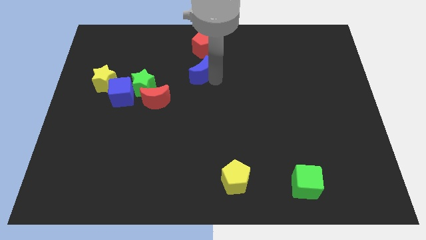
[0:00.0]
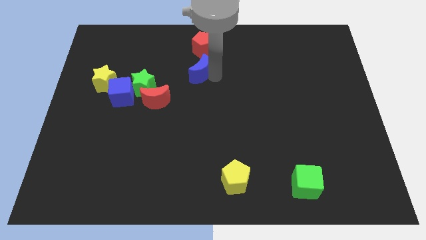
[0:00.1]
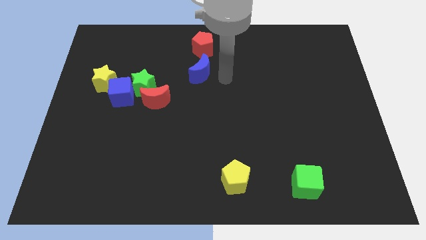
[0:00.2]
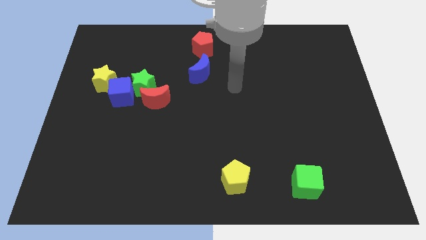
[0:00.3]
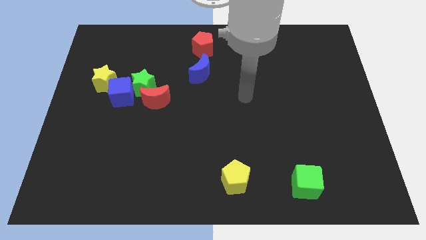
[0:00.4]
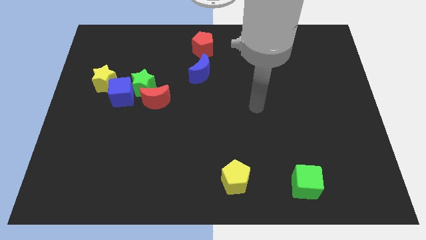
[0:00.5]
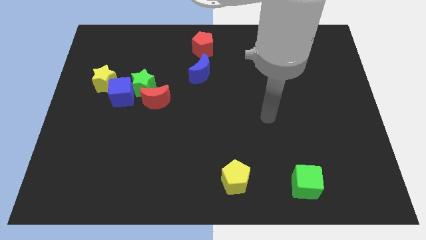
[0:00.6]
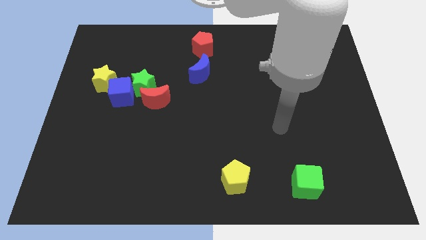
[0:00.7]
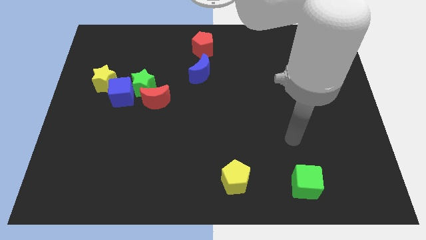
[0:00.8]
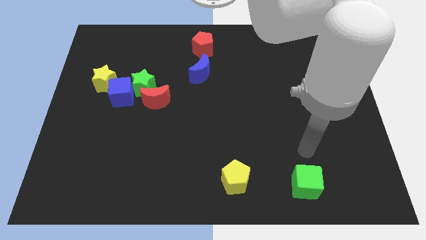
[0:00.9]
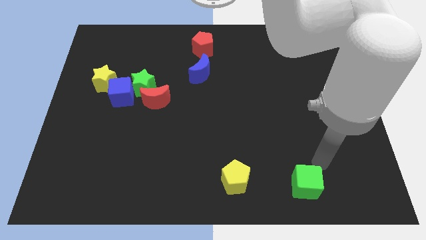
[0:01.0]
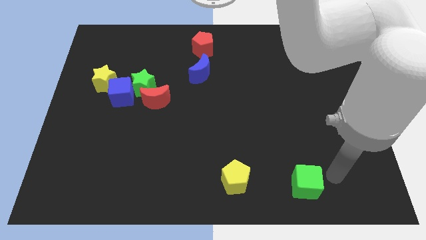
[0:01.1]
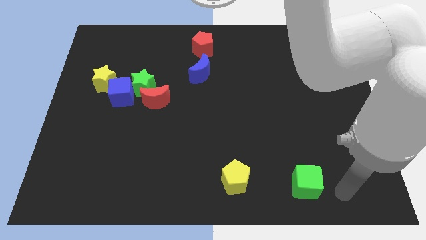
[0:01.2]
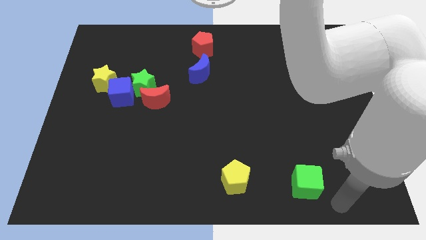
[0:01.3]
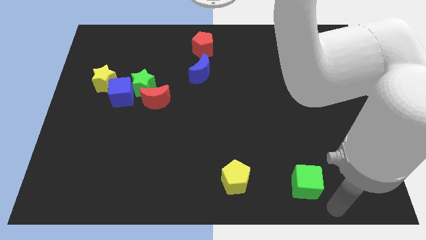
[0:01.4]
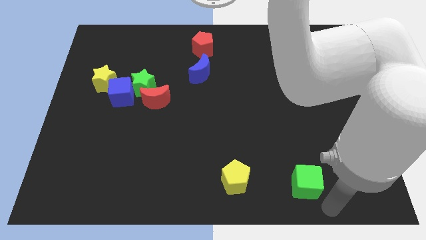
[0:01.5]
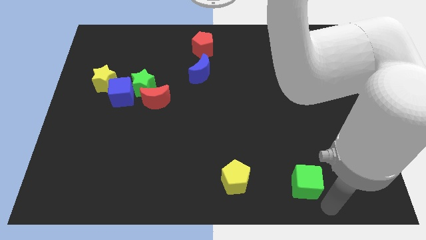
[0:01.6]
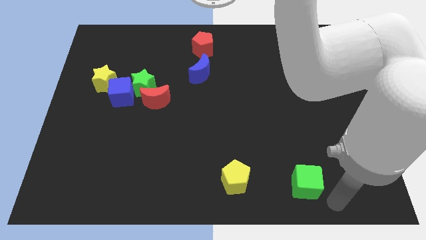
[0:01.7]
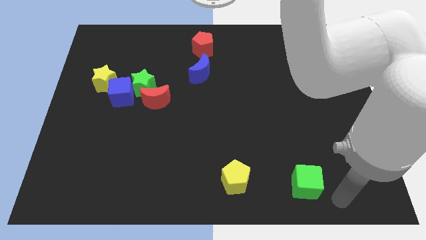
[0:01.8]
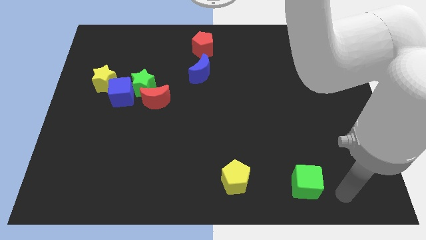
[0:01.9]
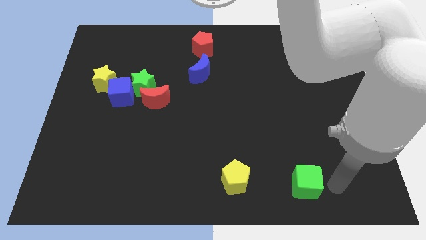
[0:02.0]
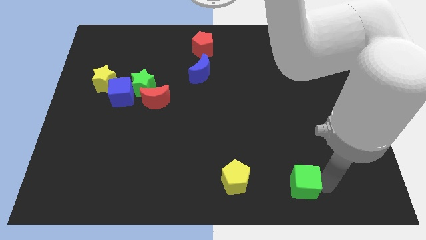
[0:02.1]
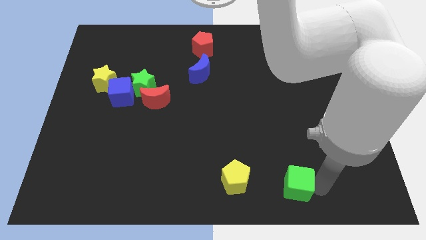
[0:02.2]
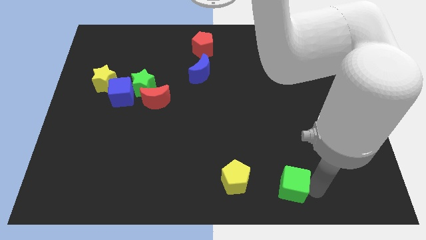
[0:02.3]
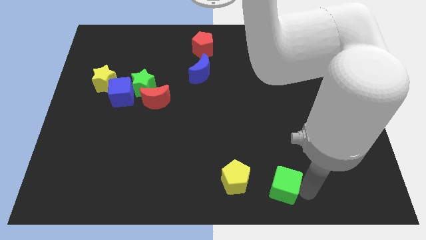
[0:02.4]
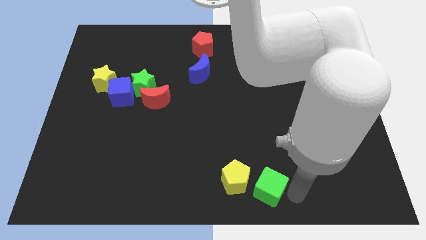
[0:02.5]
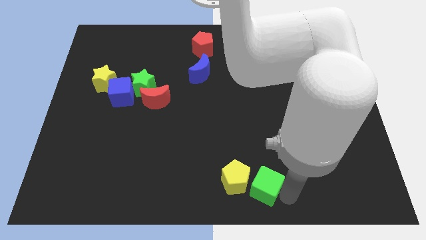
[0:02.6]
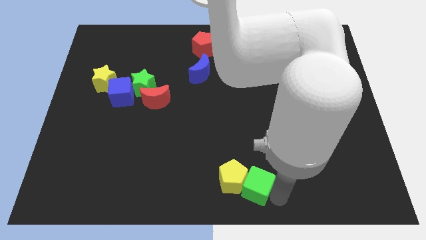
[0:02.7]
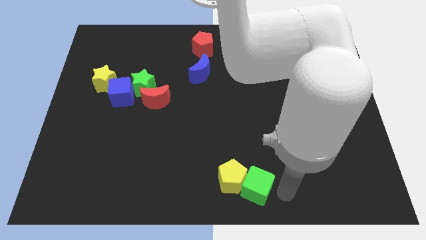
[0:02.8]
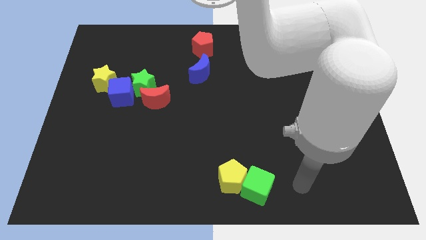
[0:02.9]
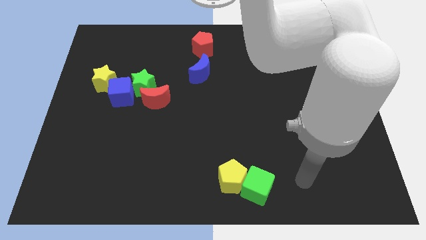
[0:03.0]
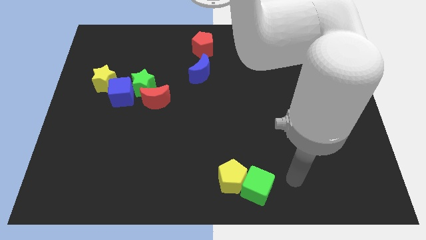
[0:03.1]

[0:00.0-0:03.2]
push green cube into the yellow pentagon

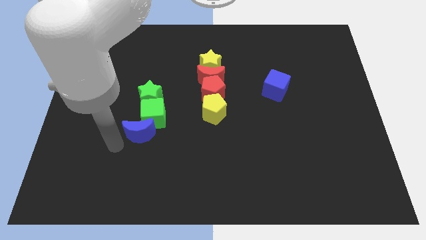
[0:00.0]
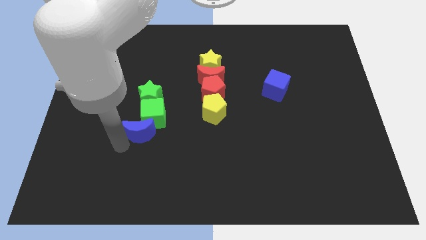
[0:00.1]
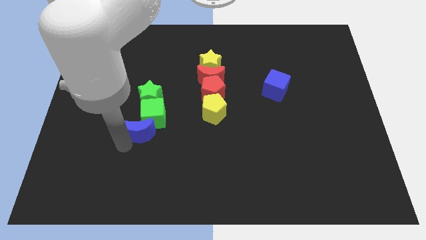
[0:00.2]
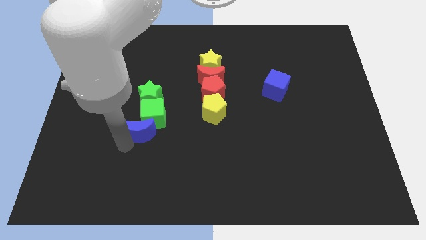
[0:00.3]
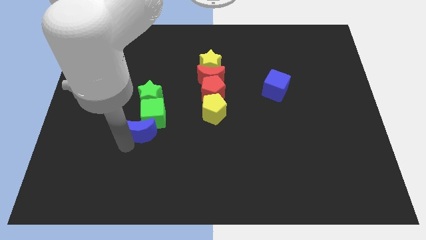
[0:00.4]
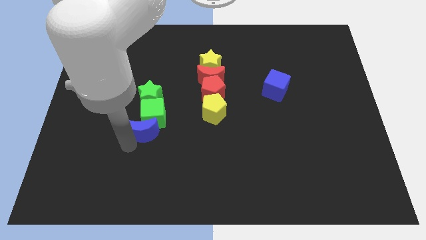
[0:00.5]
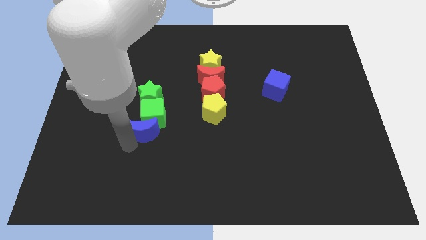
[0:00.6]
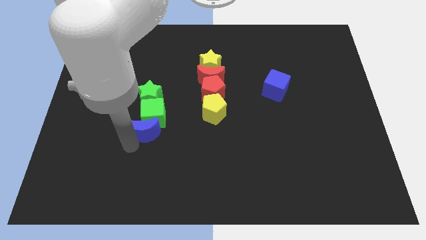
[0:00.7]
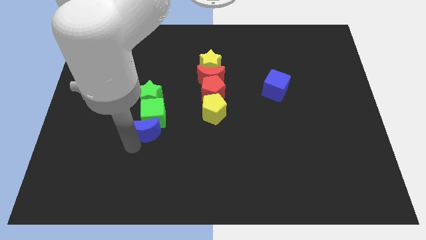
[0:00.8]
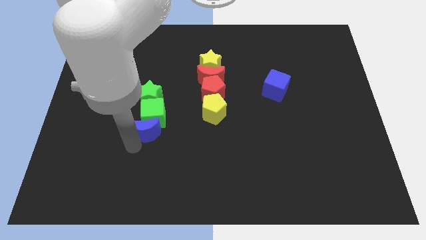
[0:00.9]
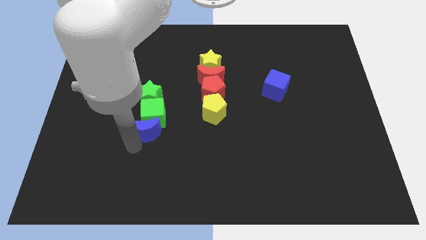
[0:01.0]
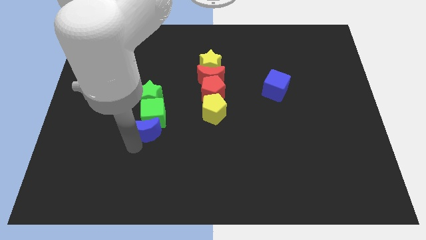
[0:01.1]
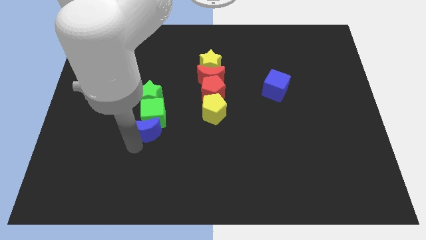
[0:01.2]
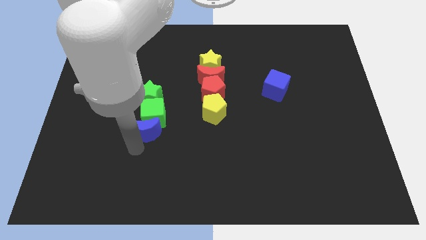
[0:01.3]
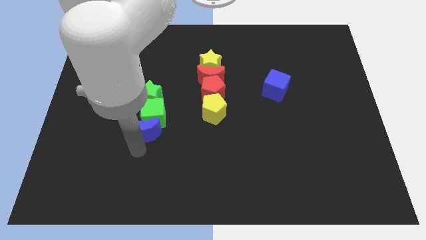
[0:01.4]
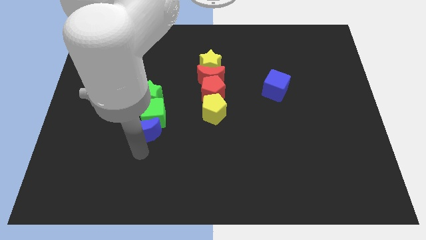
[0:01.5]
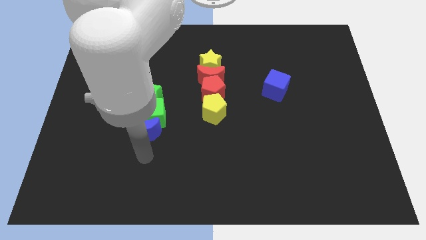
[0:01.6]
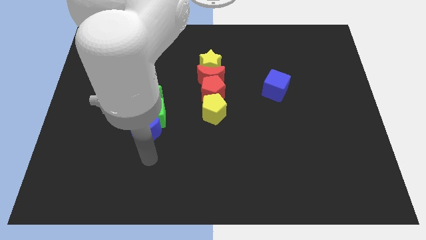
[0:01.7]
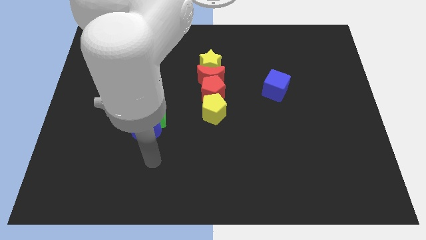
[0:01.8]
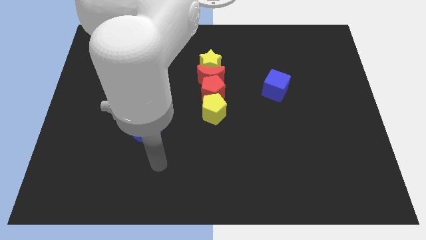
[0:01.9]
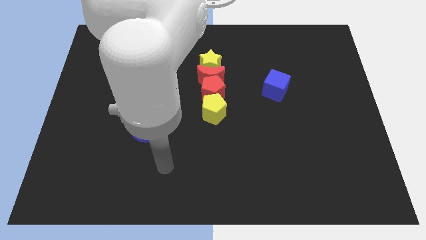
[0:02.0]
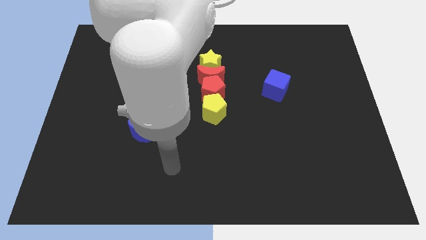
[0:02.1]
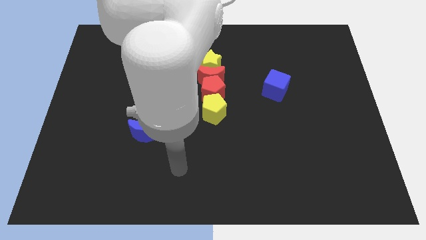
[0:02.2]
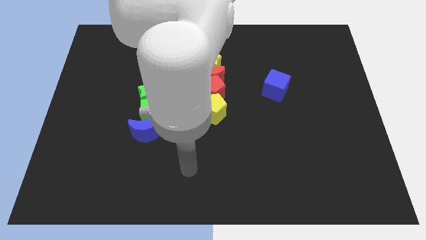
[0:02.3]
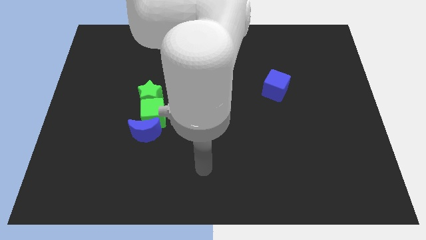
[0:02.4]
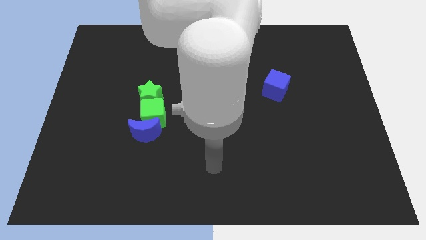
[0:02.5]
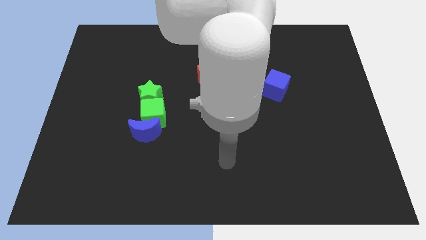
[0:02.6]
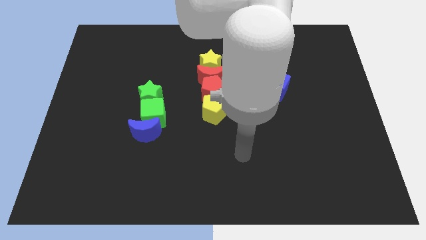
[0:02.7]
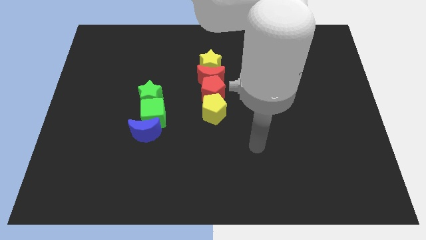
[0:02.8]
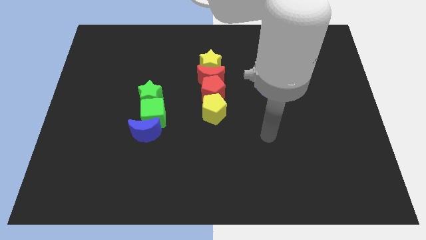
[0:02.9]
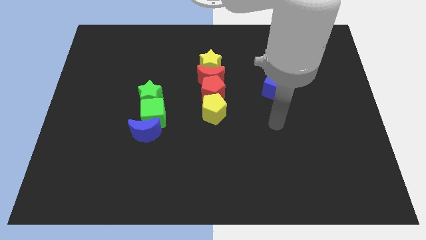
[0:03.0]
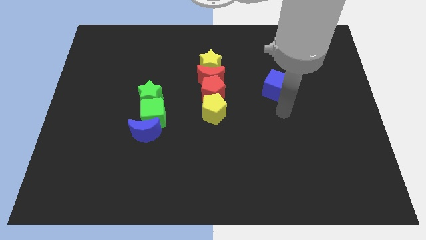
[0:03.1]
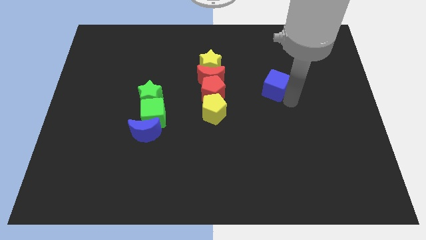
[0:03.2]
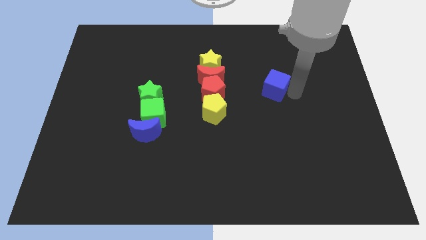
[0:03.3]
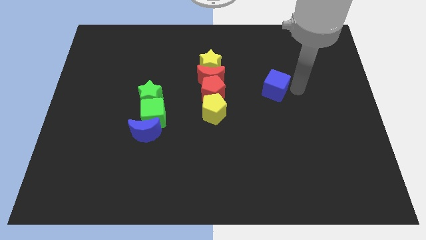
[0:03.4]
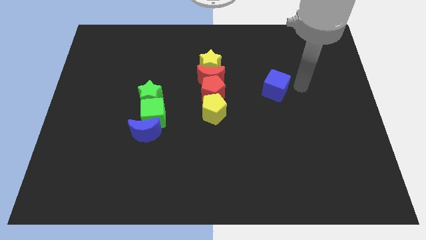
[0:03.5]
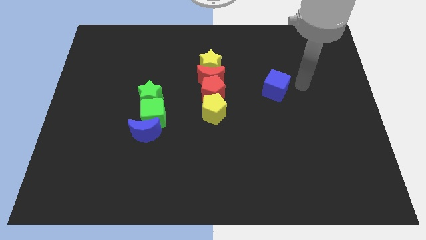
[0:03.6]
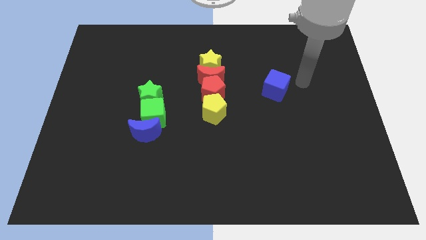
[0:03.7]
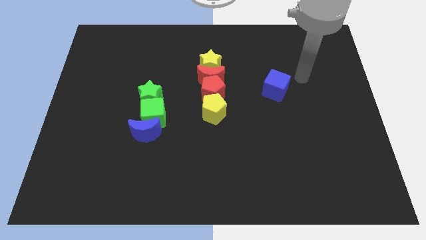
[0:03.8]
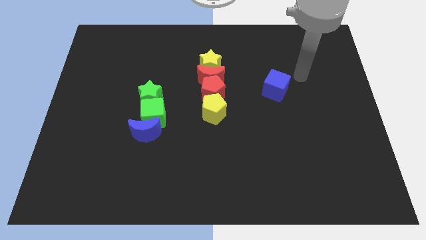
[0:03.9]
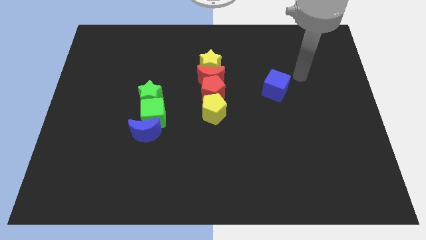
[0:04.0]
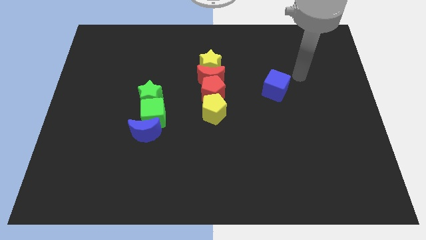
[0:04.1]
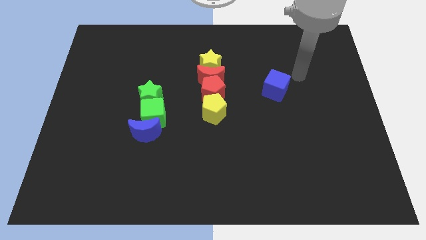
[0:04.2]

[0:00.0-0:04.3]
move the blue moon slightly to the right

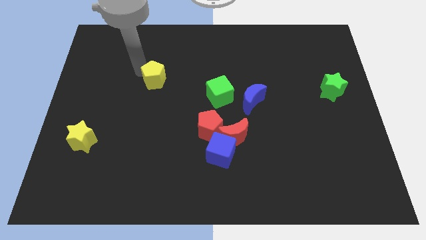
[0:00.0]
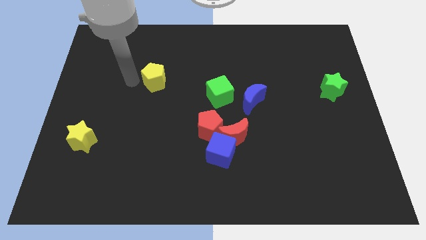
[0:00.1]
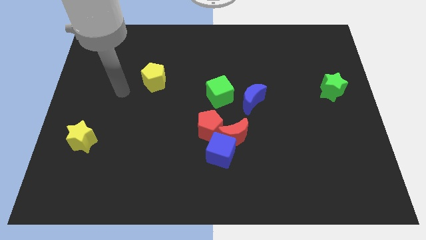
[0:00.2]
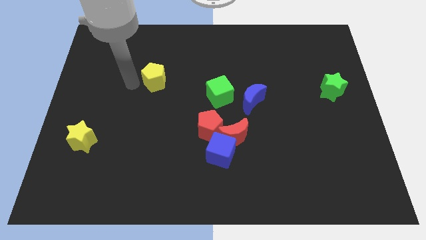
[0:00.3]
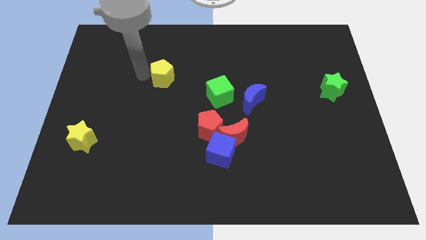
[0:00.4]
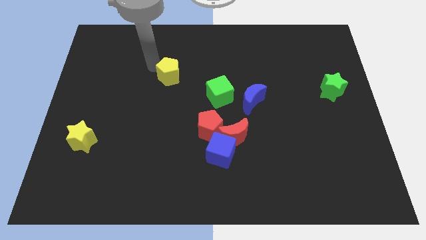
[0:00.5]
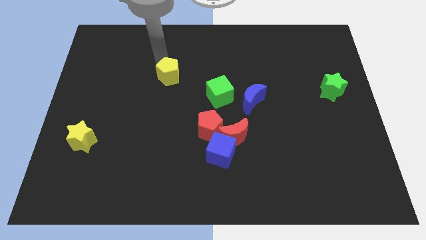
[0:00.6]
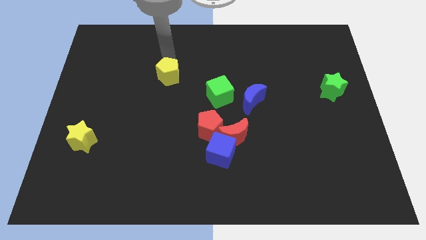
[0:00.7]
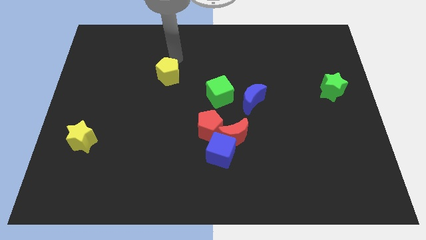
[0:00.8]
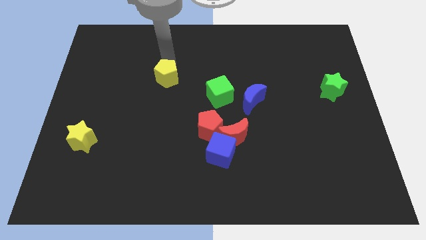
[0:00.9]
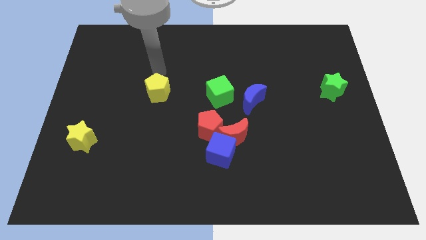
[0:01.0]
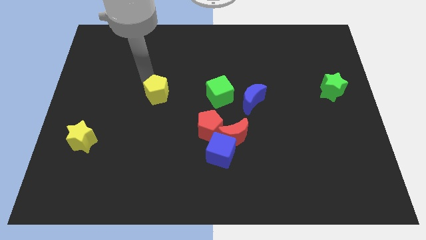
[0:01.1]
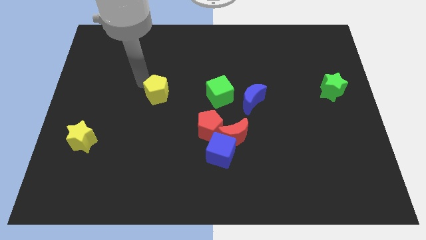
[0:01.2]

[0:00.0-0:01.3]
place the yellow pentagon to the left of the green cube
